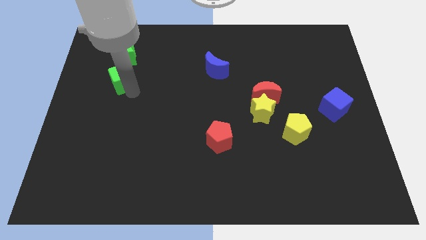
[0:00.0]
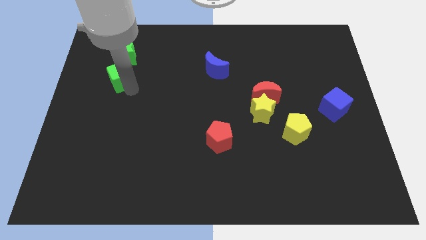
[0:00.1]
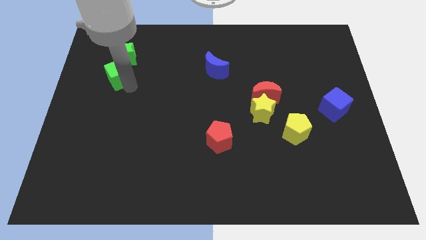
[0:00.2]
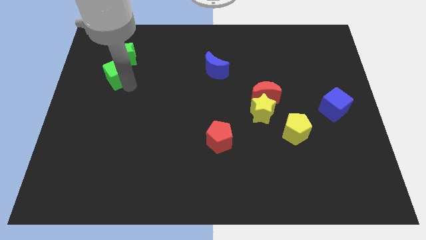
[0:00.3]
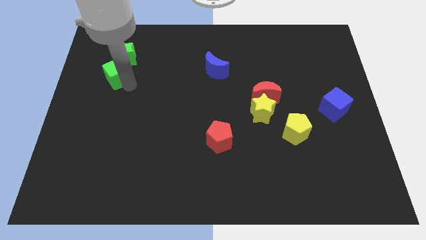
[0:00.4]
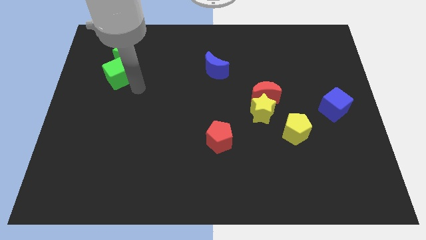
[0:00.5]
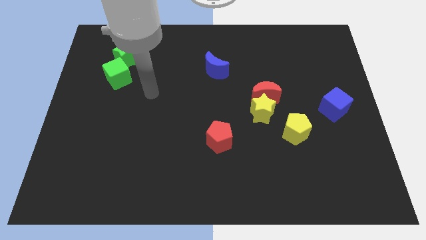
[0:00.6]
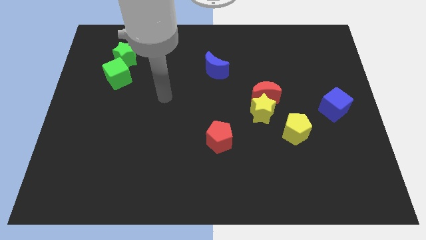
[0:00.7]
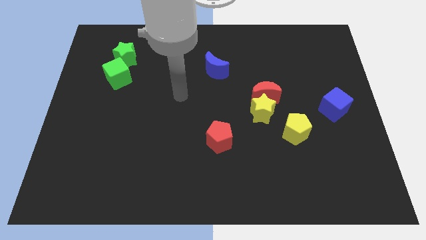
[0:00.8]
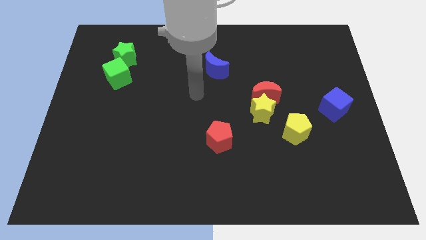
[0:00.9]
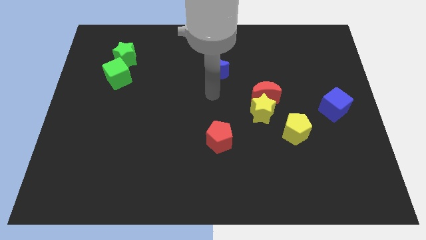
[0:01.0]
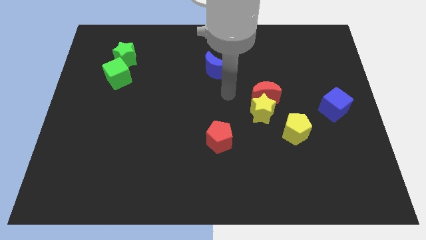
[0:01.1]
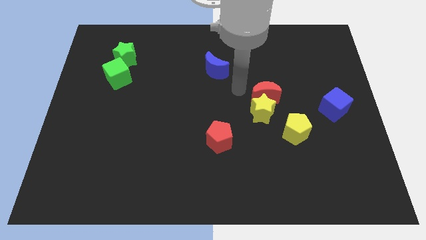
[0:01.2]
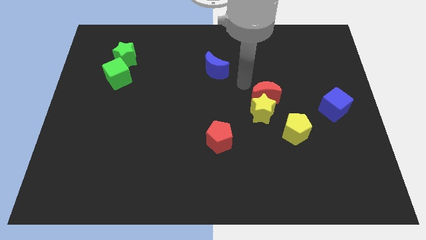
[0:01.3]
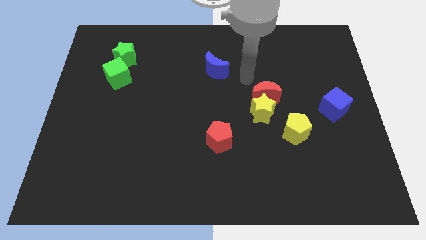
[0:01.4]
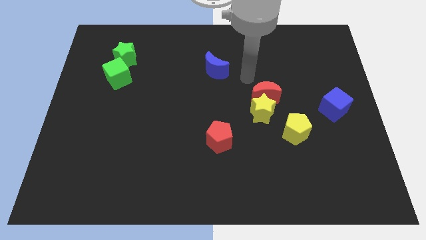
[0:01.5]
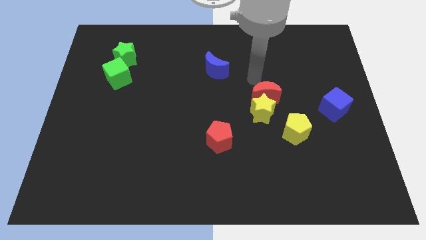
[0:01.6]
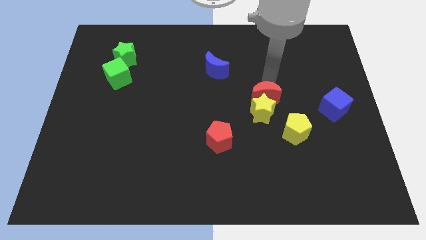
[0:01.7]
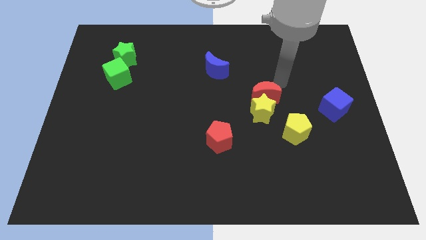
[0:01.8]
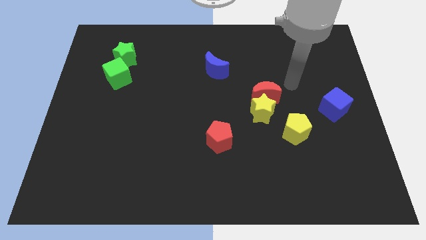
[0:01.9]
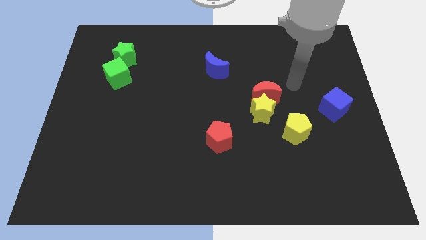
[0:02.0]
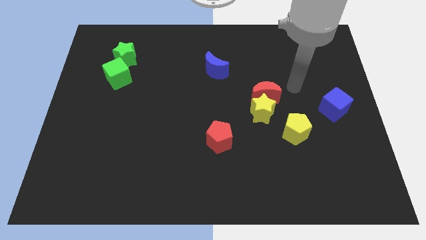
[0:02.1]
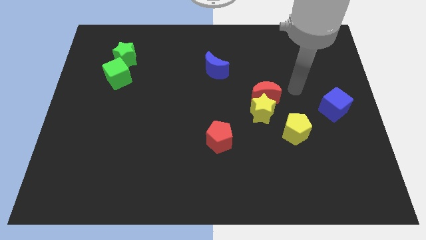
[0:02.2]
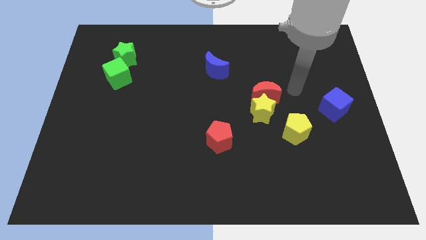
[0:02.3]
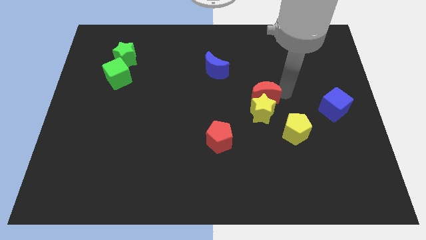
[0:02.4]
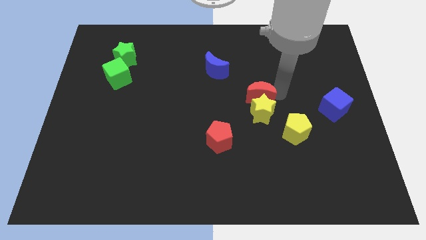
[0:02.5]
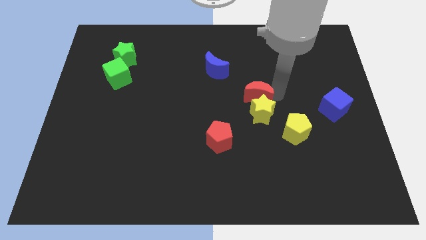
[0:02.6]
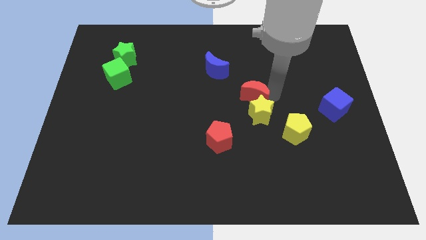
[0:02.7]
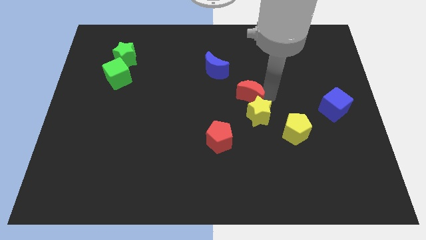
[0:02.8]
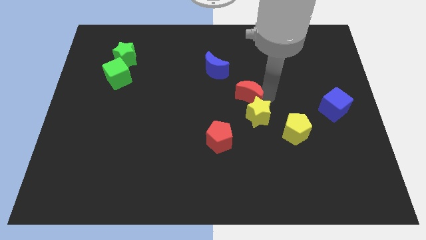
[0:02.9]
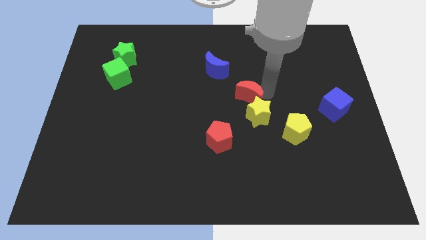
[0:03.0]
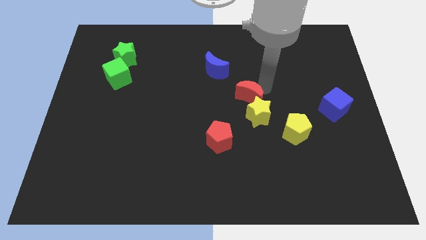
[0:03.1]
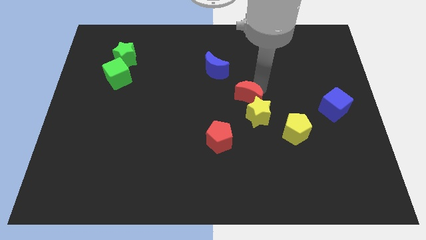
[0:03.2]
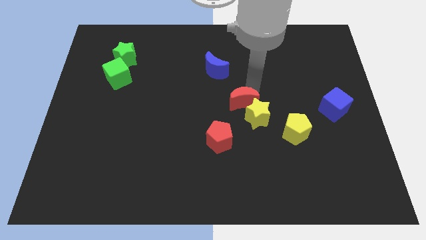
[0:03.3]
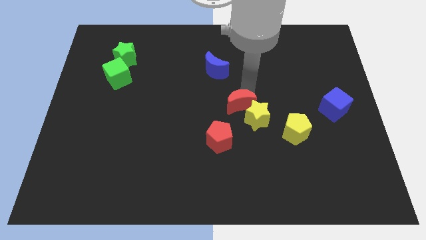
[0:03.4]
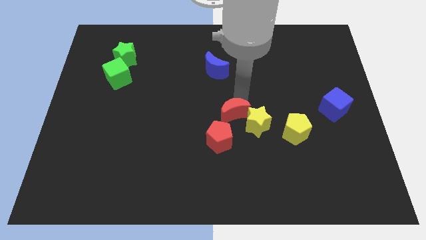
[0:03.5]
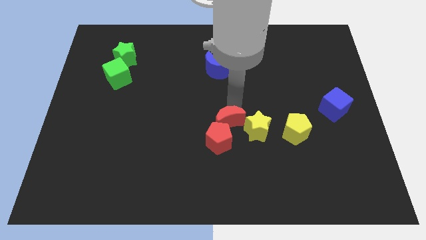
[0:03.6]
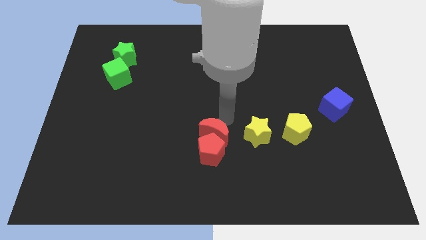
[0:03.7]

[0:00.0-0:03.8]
push the red moon into the red pentagon

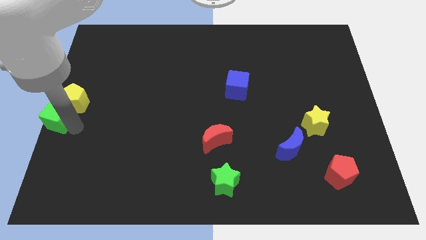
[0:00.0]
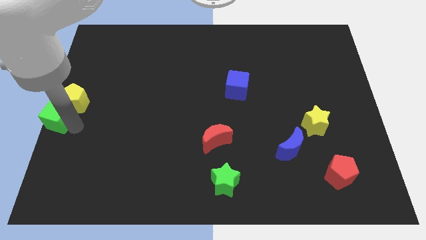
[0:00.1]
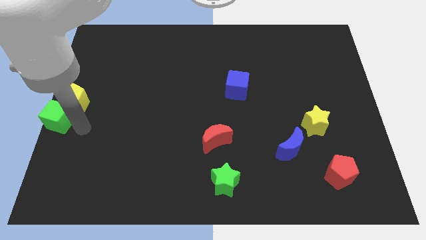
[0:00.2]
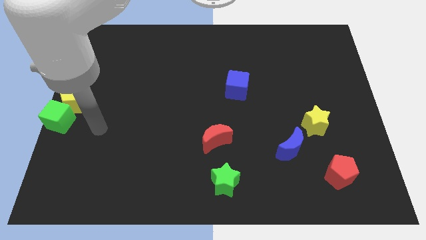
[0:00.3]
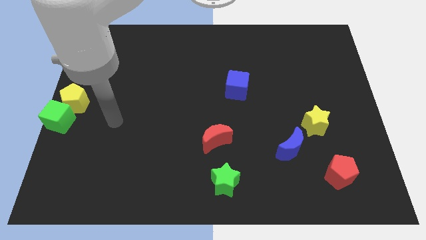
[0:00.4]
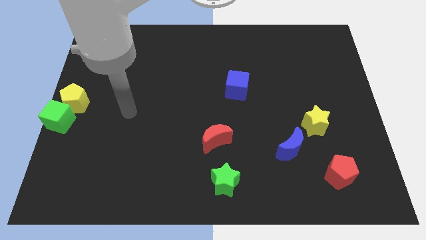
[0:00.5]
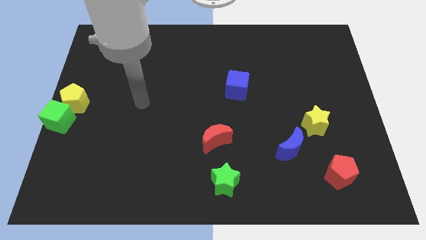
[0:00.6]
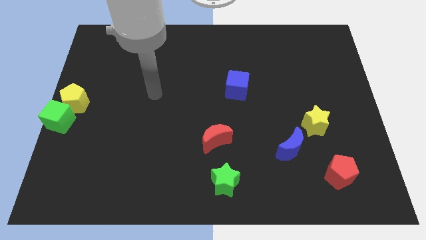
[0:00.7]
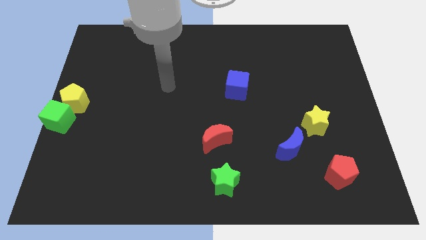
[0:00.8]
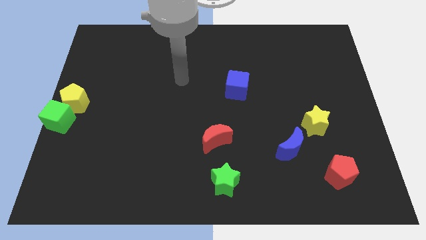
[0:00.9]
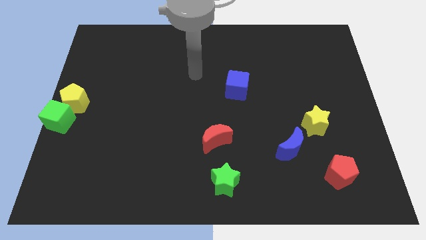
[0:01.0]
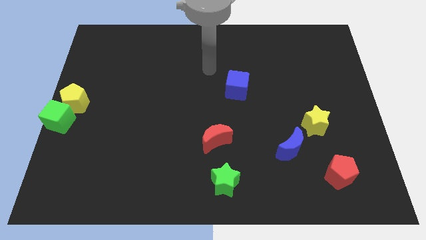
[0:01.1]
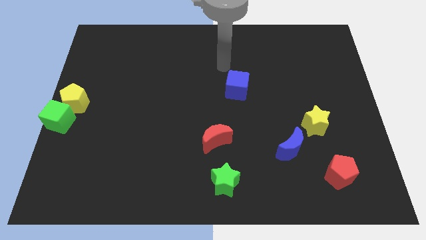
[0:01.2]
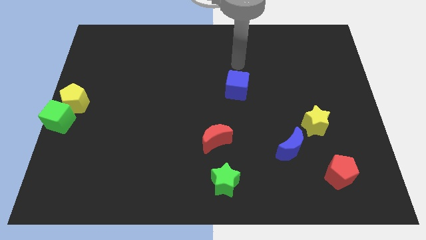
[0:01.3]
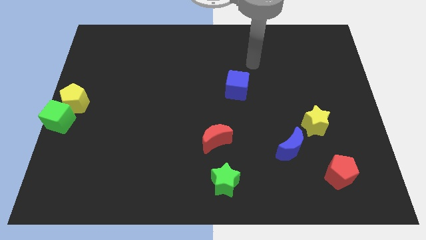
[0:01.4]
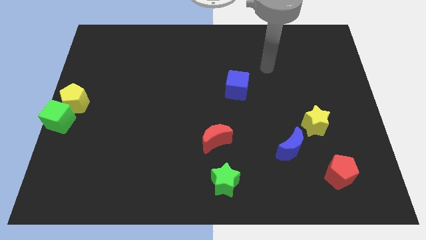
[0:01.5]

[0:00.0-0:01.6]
push your arm away from the green cube

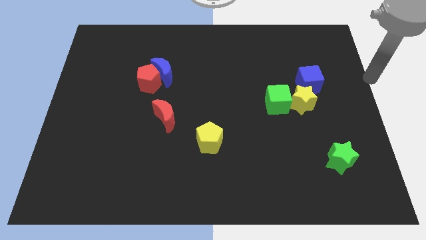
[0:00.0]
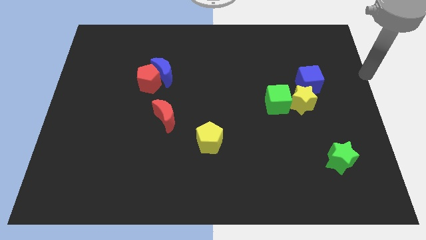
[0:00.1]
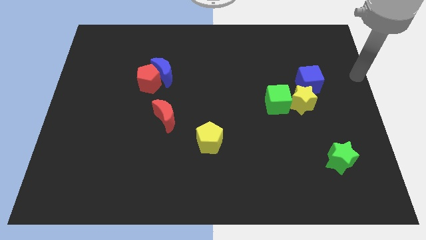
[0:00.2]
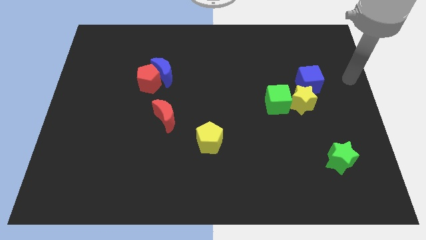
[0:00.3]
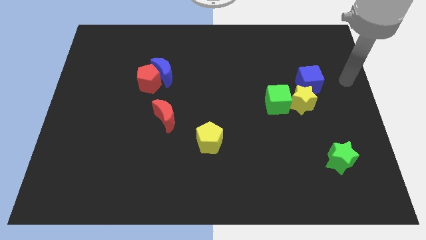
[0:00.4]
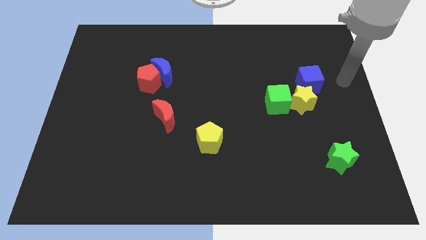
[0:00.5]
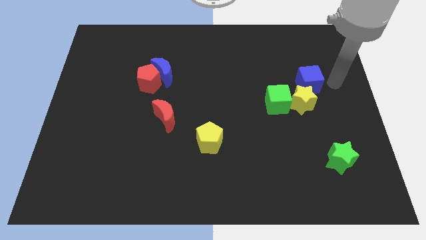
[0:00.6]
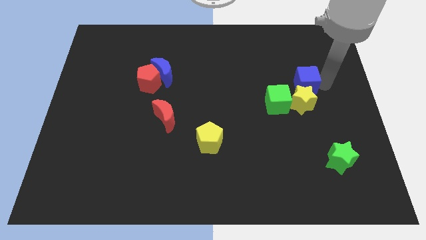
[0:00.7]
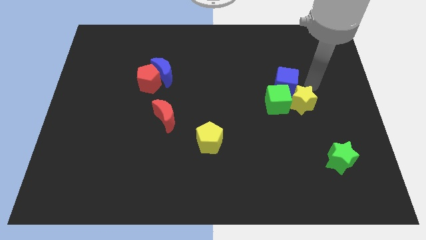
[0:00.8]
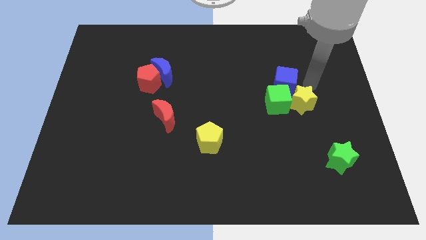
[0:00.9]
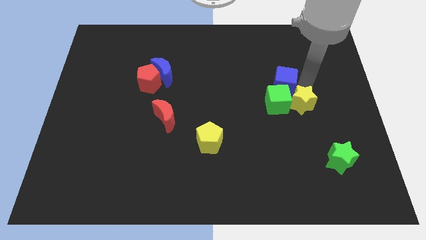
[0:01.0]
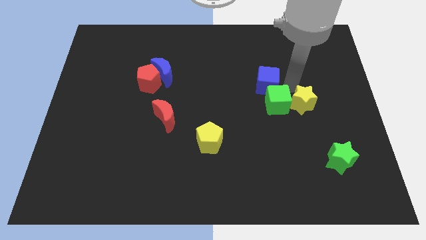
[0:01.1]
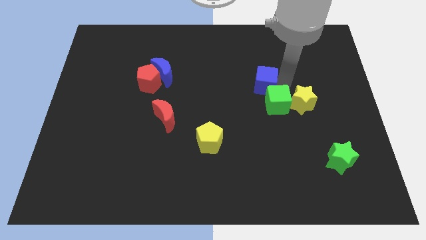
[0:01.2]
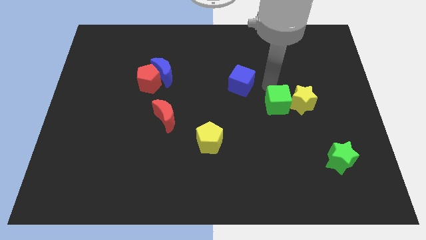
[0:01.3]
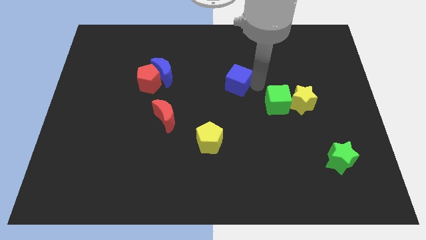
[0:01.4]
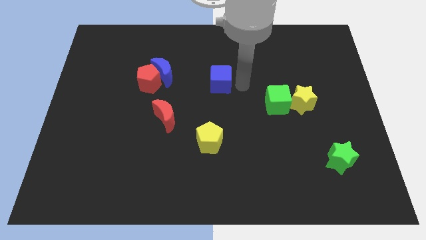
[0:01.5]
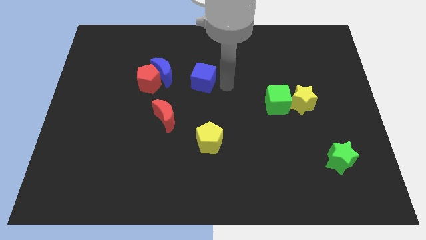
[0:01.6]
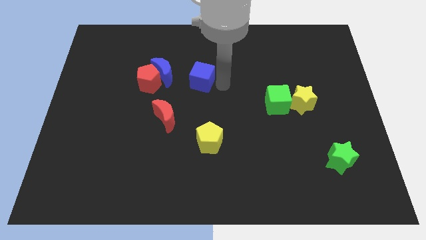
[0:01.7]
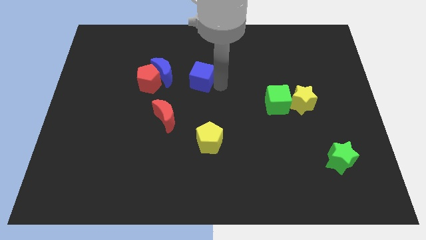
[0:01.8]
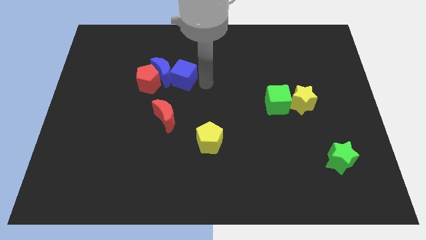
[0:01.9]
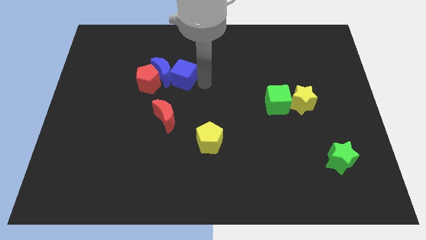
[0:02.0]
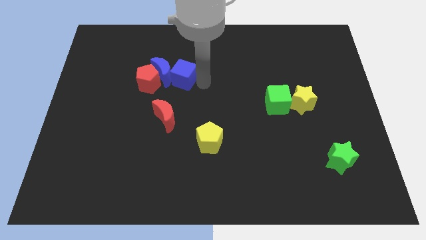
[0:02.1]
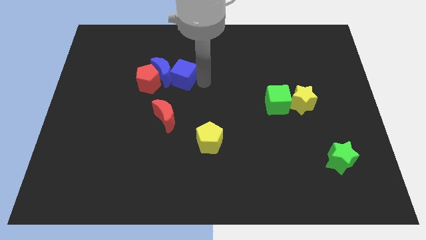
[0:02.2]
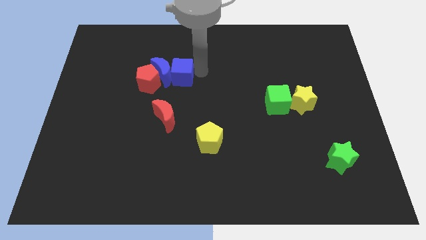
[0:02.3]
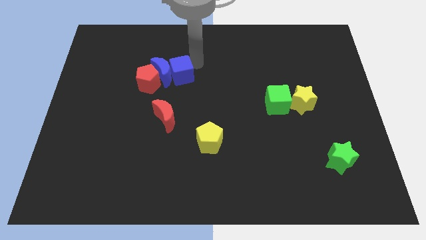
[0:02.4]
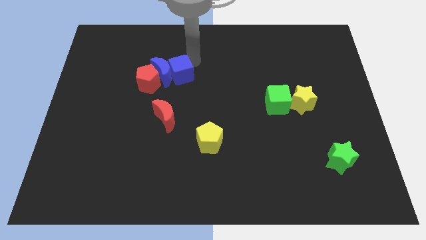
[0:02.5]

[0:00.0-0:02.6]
push blue cube towards blue crescent

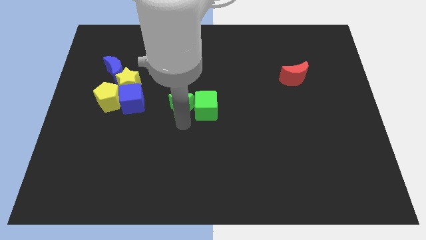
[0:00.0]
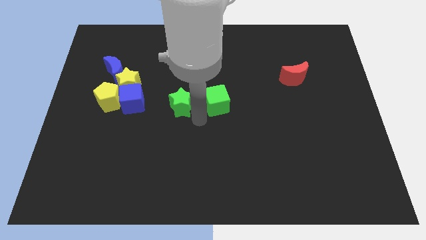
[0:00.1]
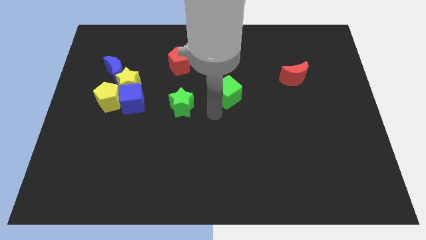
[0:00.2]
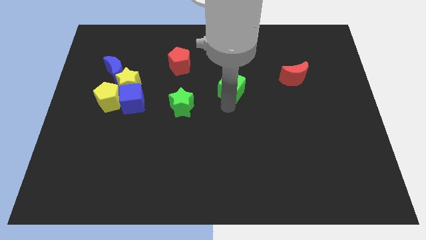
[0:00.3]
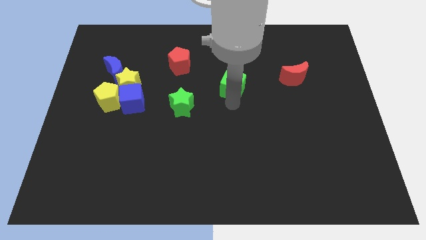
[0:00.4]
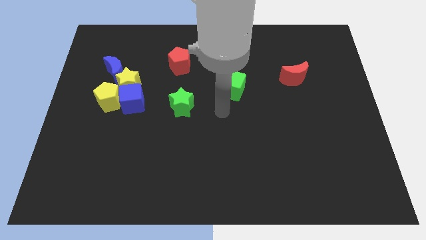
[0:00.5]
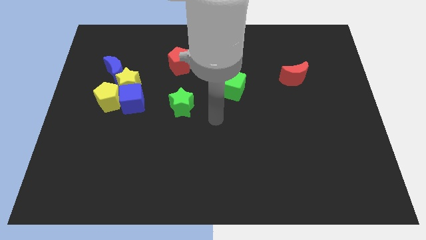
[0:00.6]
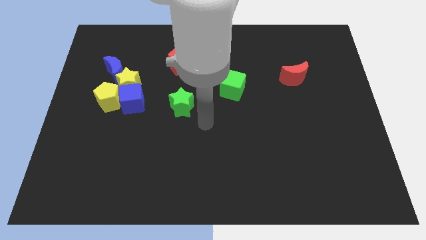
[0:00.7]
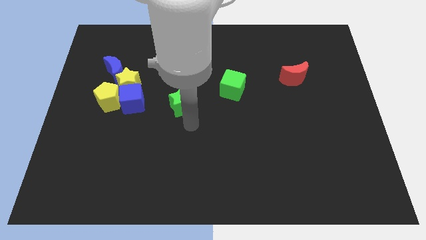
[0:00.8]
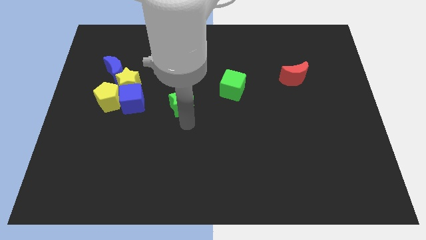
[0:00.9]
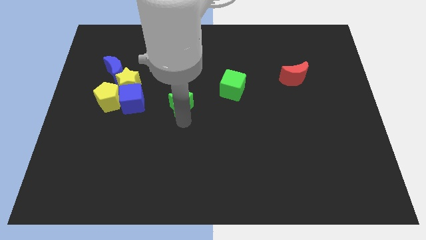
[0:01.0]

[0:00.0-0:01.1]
place green cube to the left of the red moon
